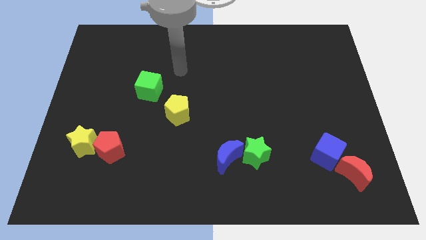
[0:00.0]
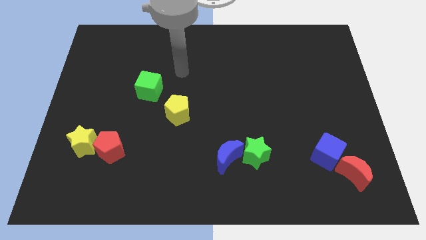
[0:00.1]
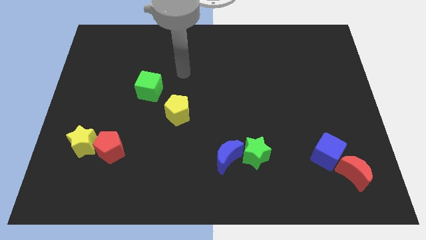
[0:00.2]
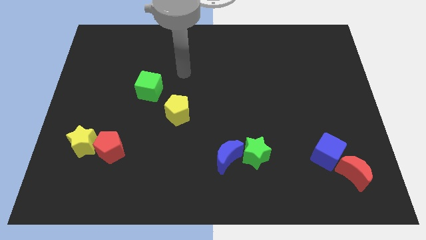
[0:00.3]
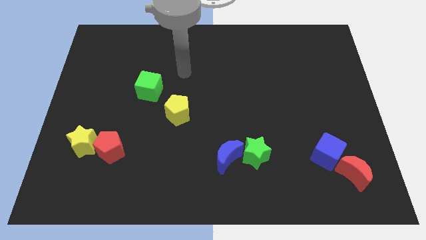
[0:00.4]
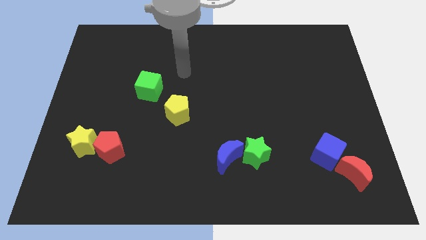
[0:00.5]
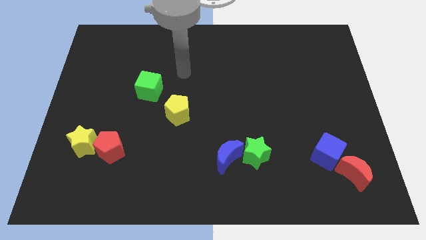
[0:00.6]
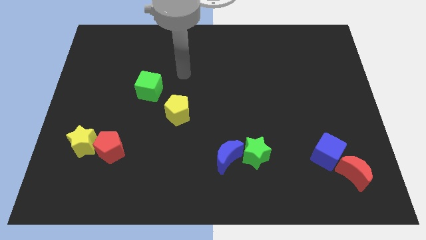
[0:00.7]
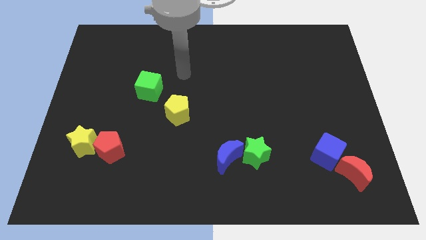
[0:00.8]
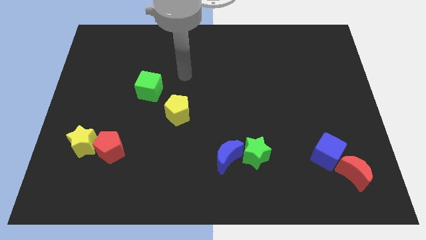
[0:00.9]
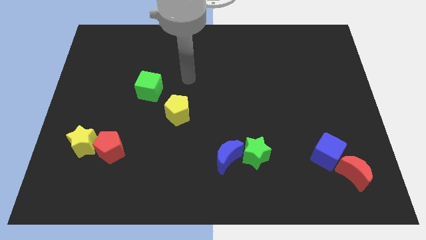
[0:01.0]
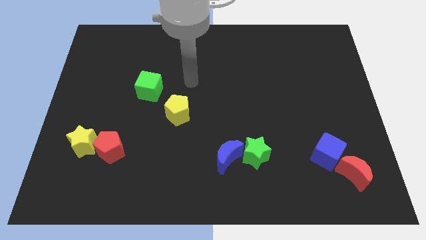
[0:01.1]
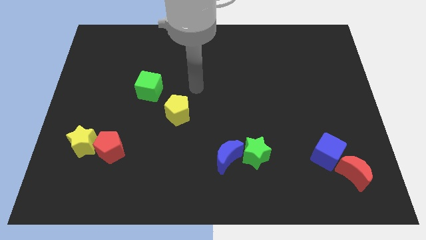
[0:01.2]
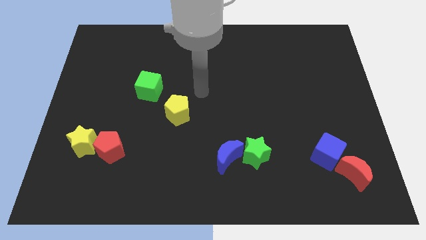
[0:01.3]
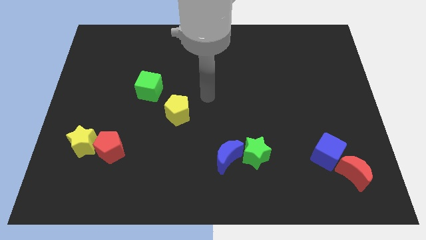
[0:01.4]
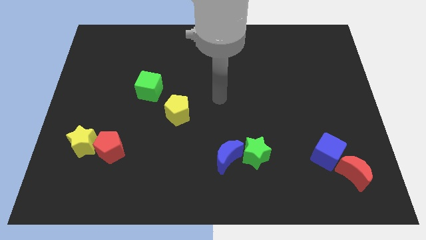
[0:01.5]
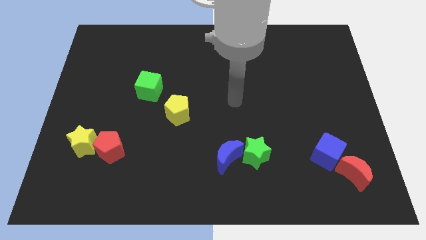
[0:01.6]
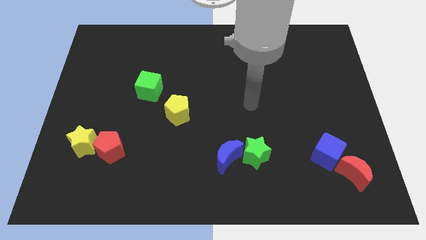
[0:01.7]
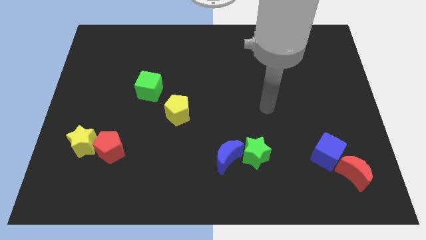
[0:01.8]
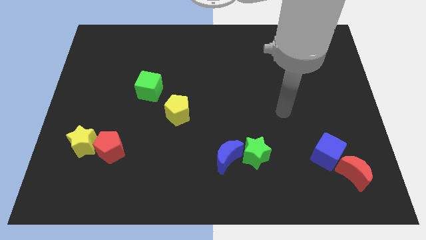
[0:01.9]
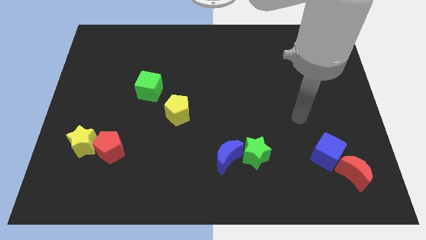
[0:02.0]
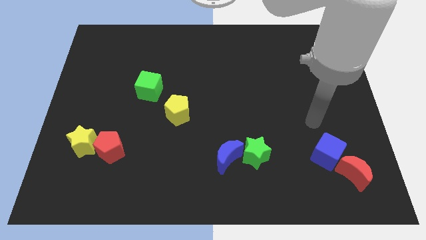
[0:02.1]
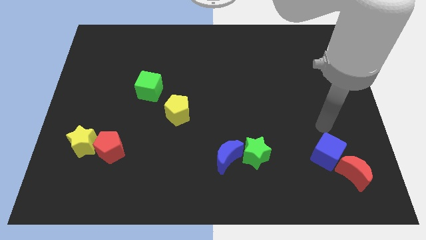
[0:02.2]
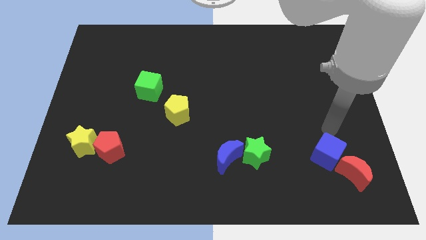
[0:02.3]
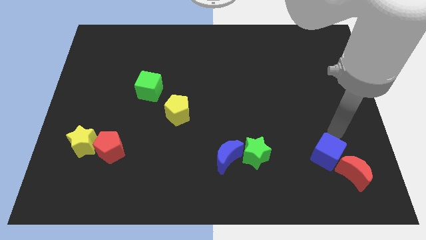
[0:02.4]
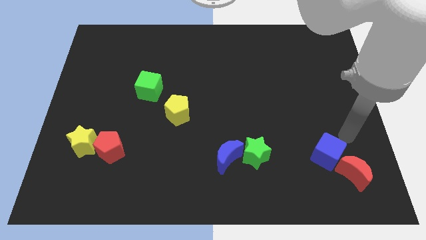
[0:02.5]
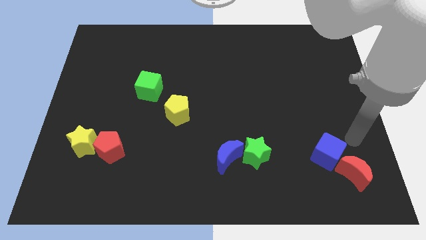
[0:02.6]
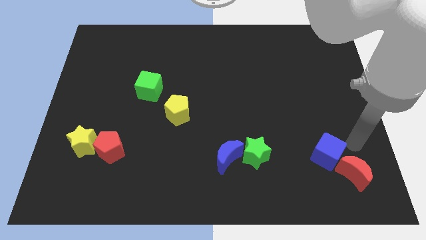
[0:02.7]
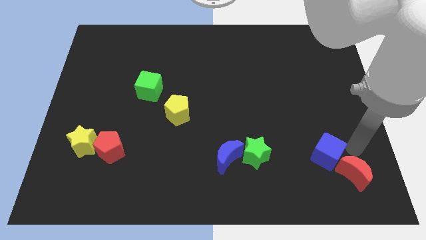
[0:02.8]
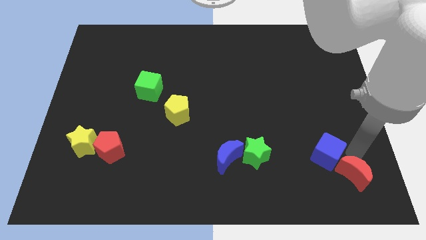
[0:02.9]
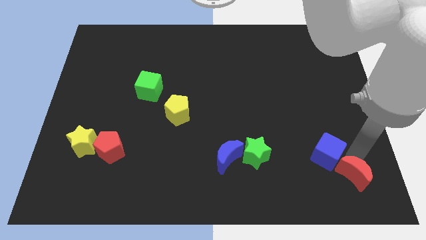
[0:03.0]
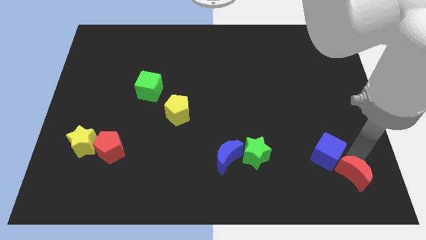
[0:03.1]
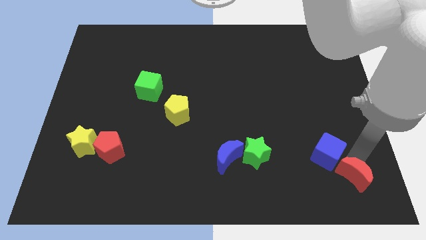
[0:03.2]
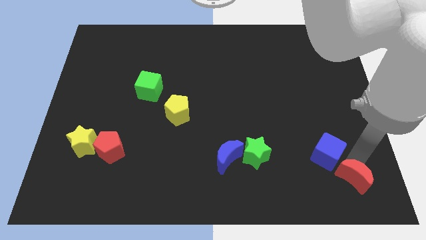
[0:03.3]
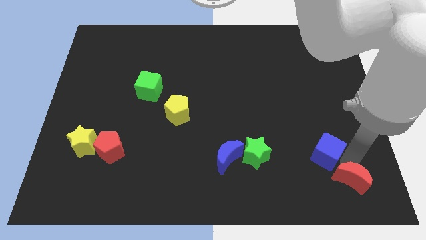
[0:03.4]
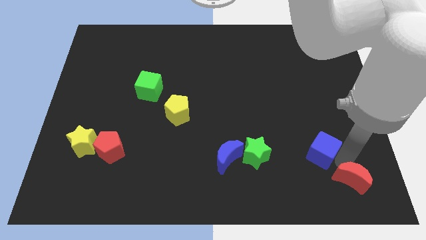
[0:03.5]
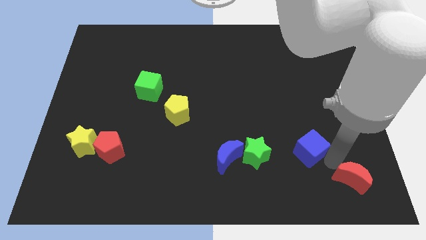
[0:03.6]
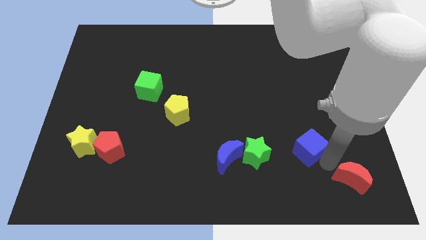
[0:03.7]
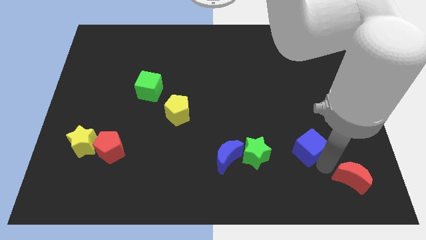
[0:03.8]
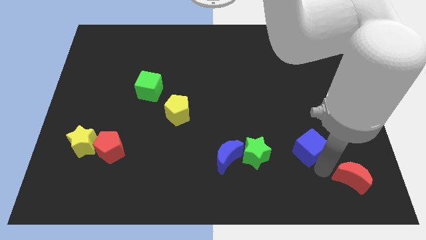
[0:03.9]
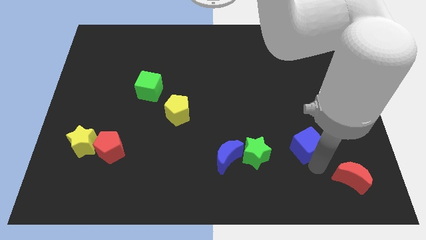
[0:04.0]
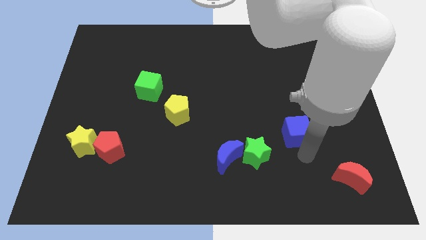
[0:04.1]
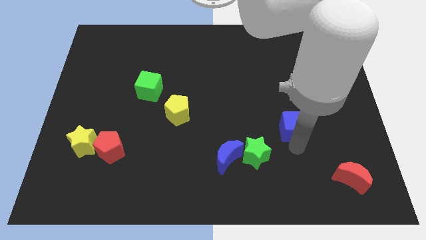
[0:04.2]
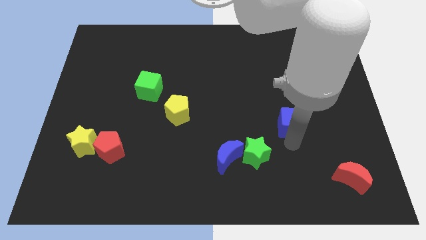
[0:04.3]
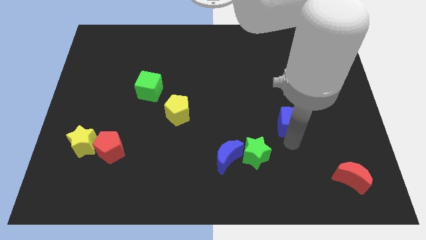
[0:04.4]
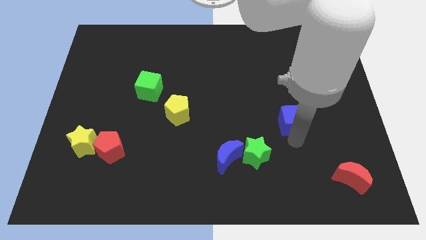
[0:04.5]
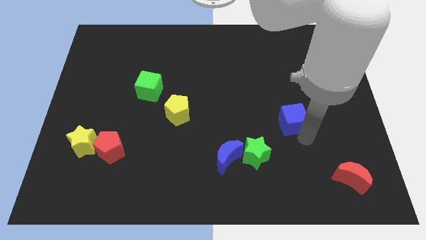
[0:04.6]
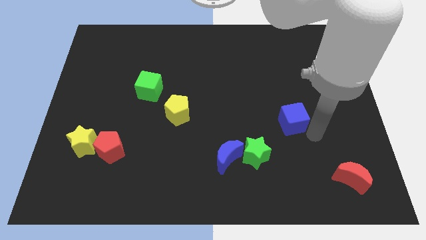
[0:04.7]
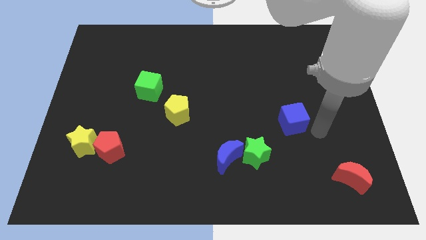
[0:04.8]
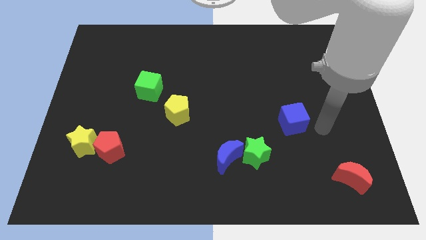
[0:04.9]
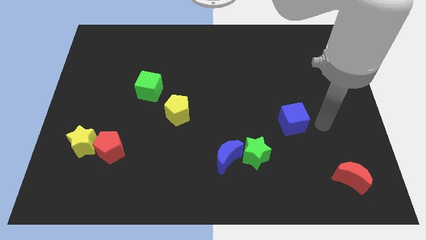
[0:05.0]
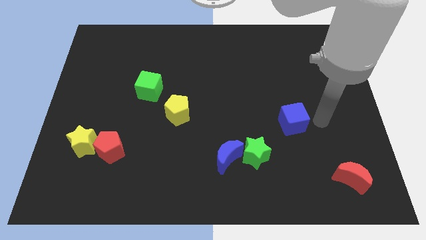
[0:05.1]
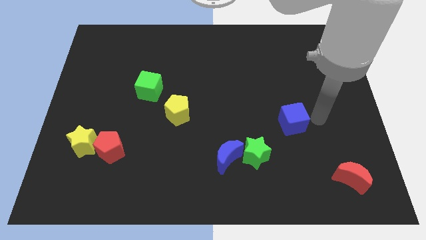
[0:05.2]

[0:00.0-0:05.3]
place the blue cube above the green star

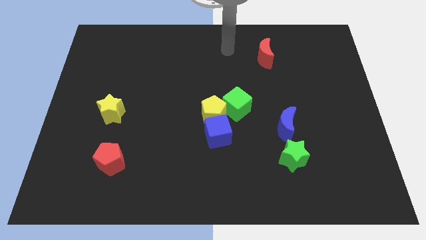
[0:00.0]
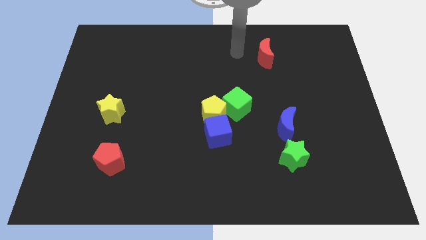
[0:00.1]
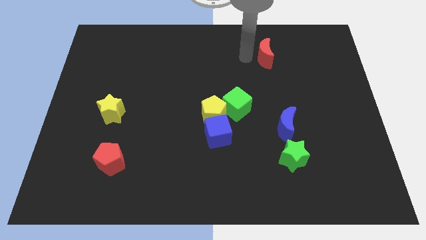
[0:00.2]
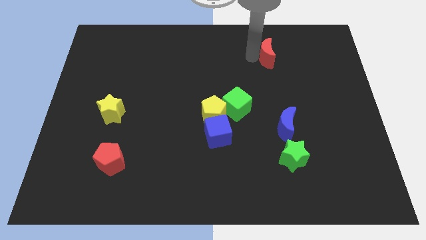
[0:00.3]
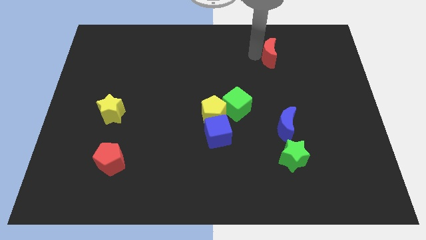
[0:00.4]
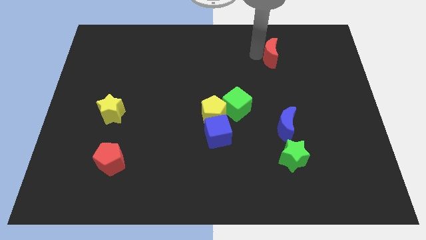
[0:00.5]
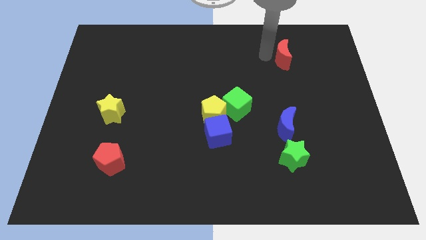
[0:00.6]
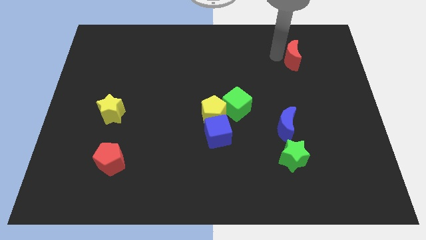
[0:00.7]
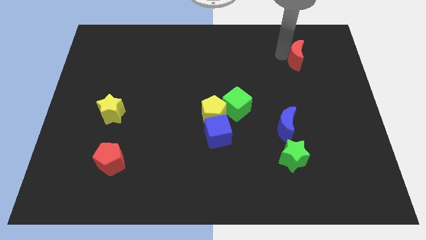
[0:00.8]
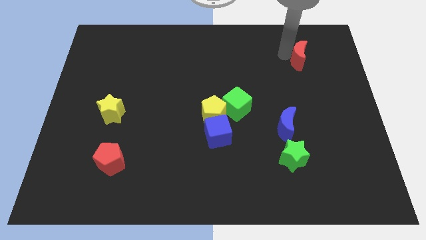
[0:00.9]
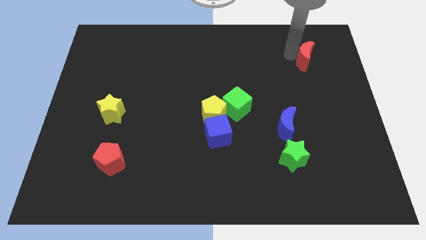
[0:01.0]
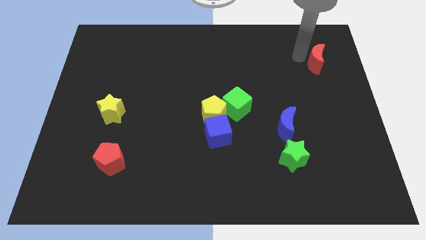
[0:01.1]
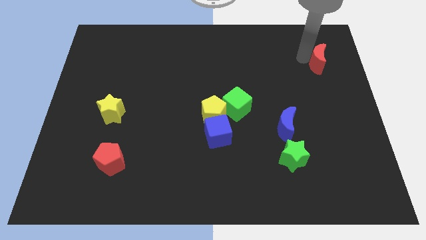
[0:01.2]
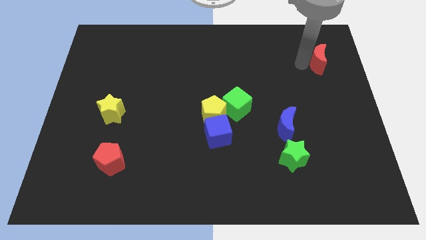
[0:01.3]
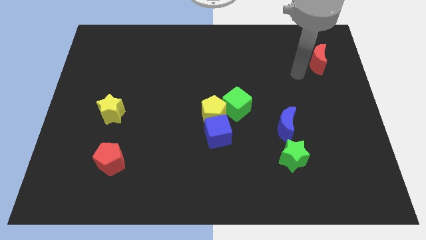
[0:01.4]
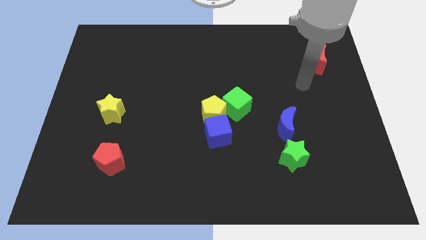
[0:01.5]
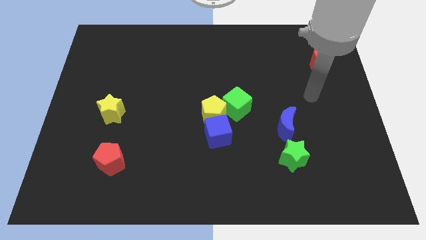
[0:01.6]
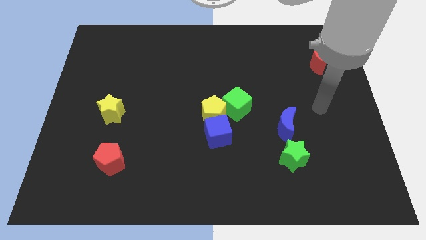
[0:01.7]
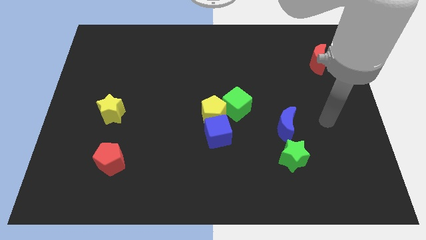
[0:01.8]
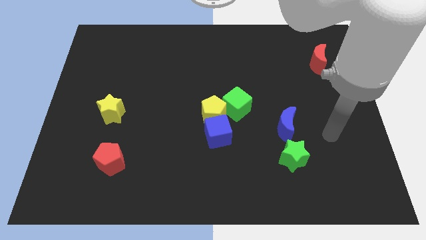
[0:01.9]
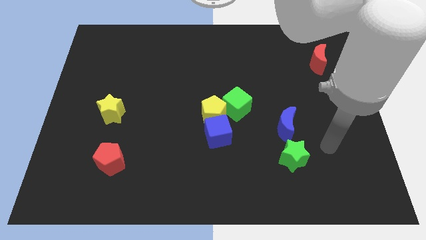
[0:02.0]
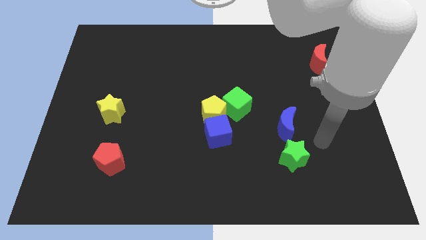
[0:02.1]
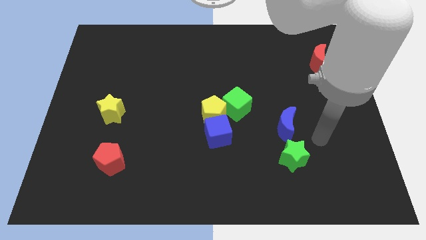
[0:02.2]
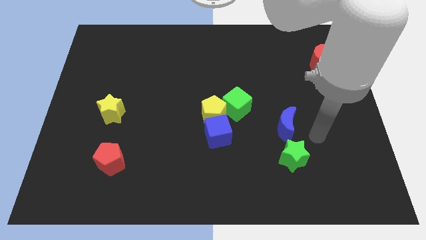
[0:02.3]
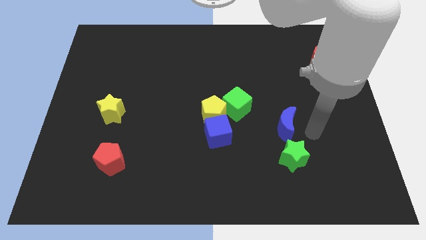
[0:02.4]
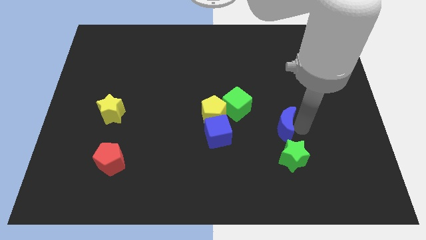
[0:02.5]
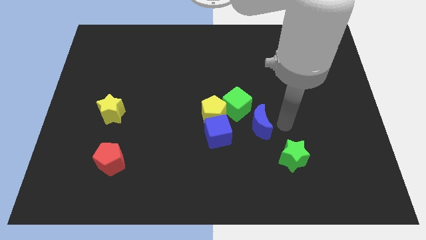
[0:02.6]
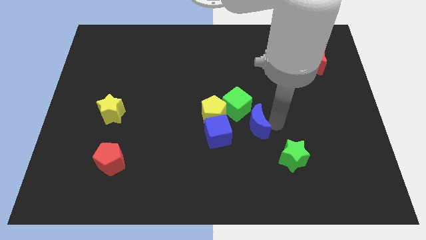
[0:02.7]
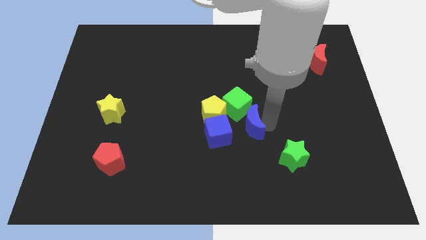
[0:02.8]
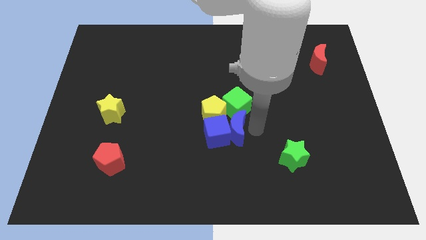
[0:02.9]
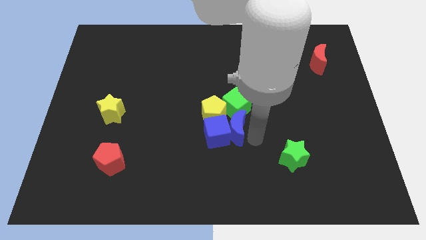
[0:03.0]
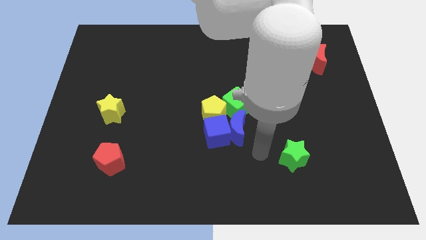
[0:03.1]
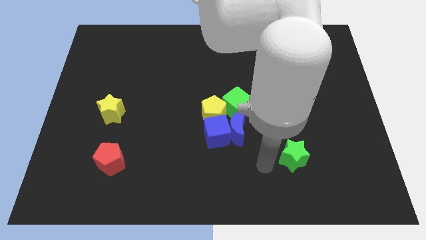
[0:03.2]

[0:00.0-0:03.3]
push blue crescent into the blue cube

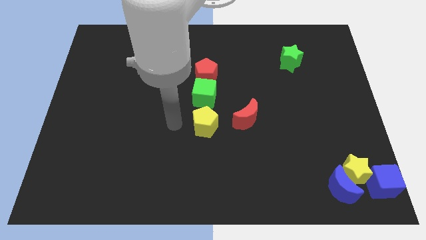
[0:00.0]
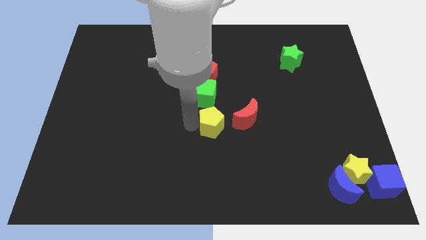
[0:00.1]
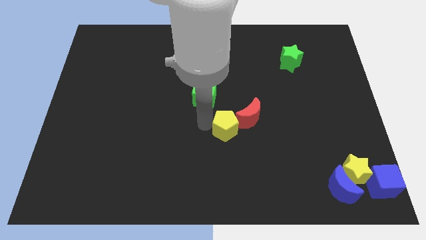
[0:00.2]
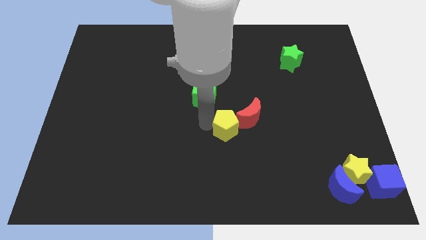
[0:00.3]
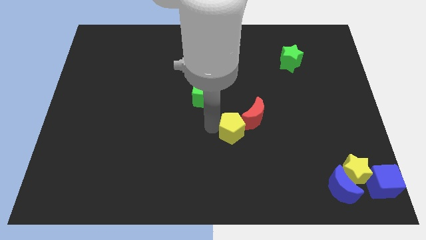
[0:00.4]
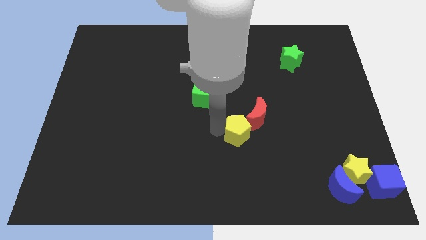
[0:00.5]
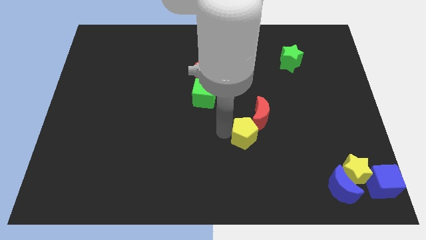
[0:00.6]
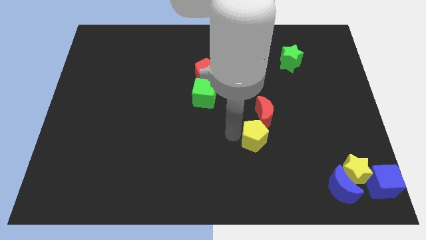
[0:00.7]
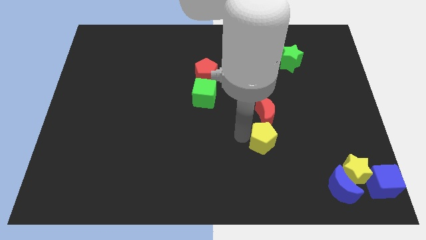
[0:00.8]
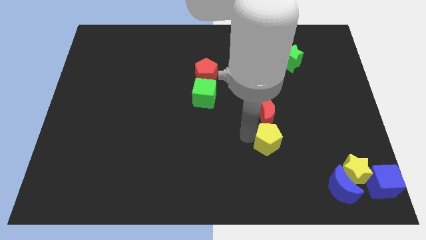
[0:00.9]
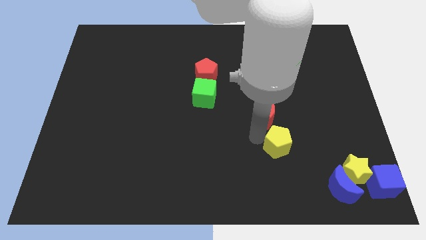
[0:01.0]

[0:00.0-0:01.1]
slide the yellow pentagon diagonal to the green cube
